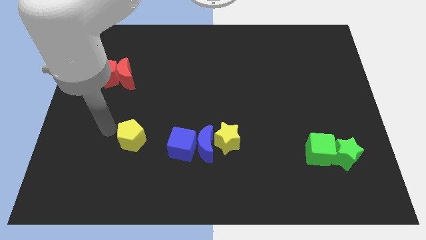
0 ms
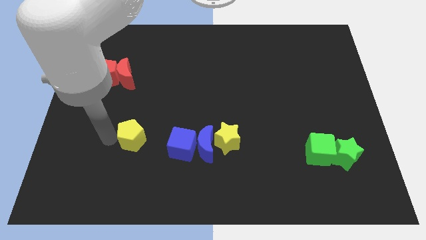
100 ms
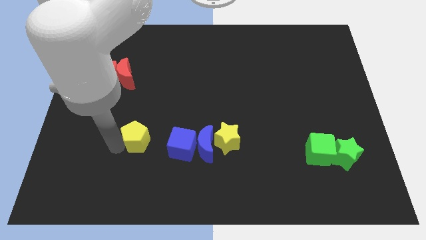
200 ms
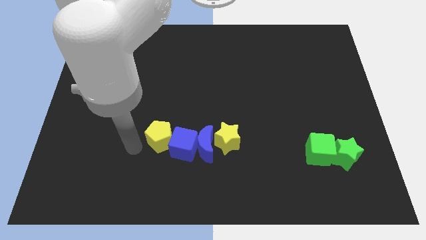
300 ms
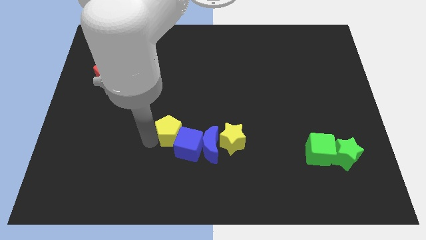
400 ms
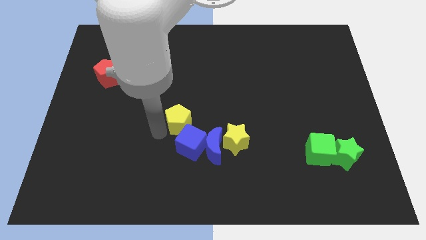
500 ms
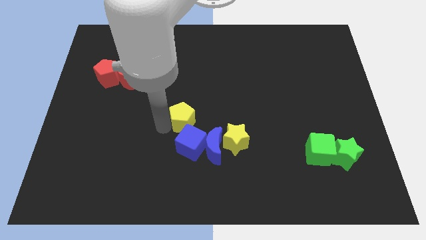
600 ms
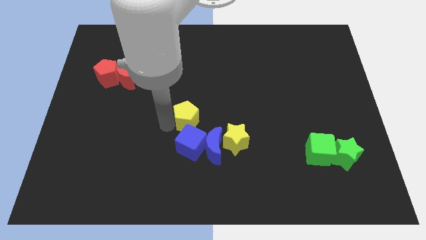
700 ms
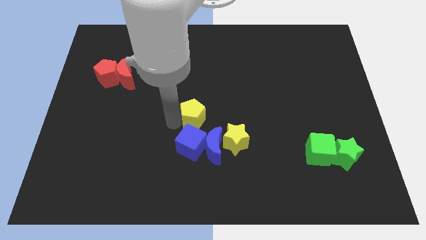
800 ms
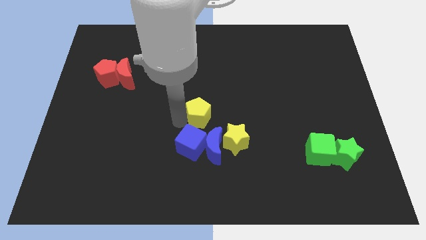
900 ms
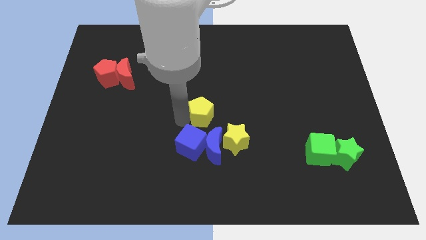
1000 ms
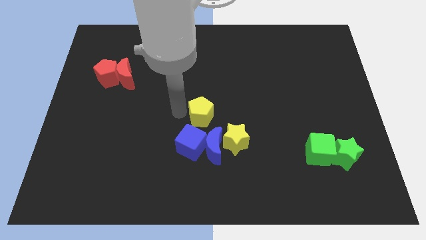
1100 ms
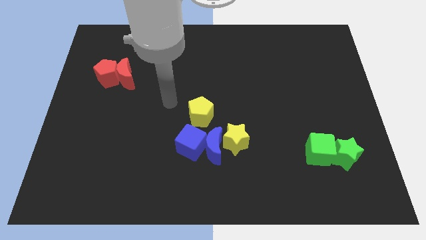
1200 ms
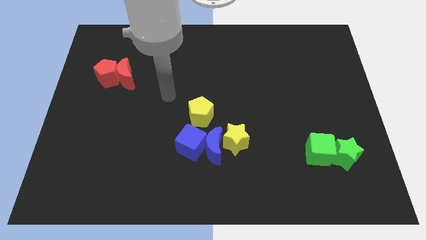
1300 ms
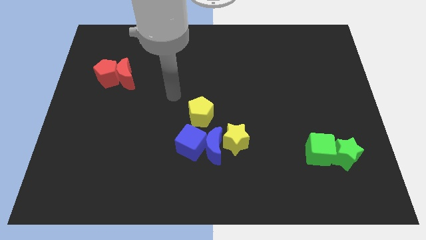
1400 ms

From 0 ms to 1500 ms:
move the yellow pentagon above the blue cube

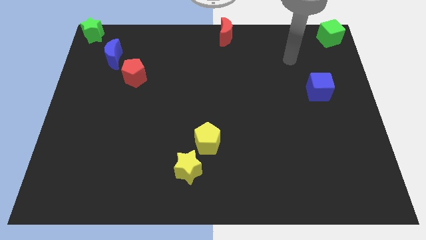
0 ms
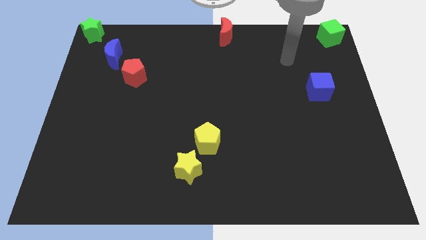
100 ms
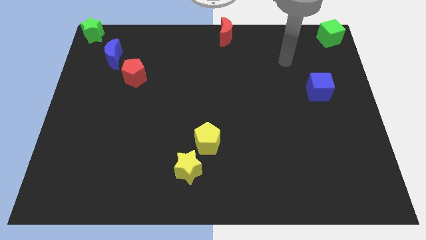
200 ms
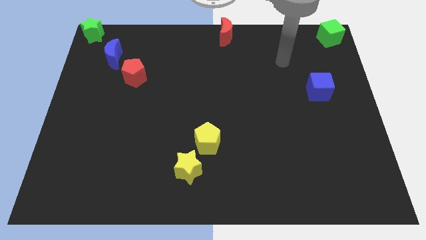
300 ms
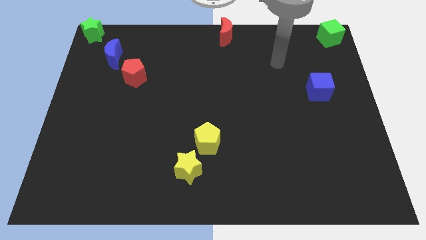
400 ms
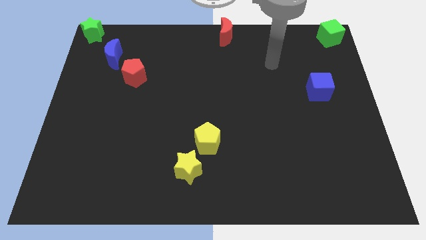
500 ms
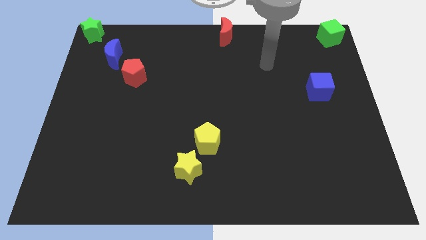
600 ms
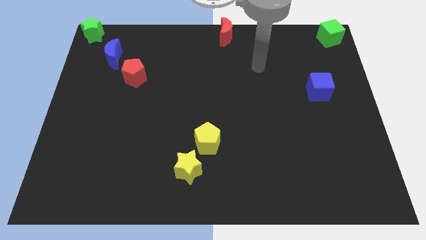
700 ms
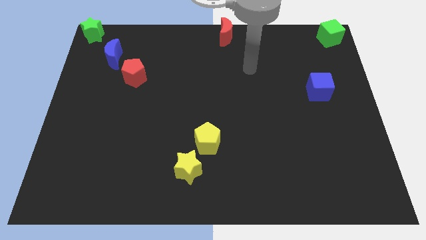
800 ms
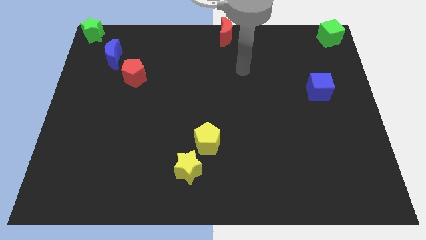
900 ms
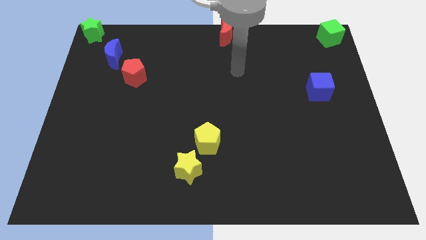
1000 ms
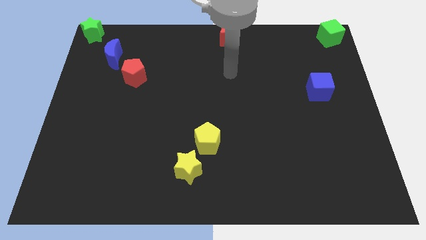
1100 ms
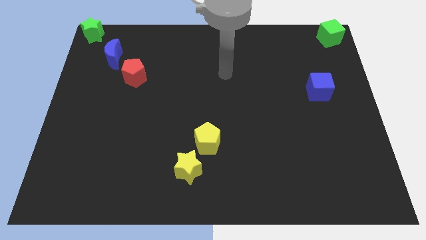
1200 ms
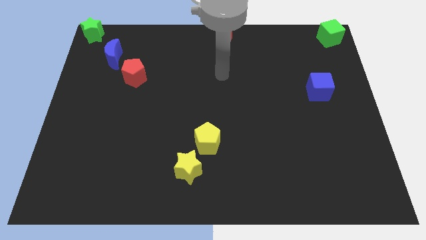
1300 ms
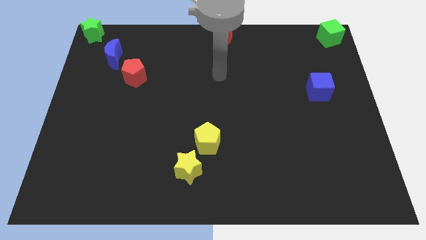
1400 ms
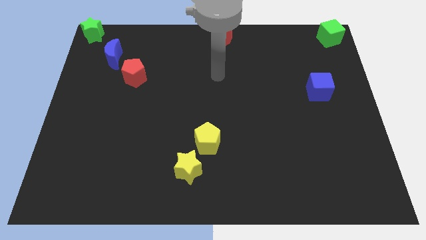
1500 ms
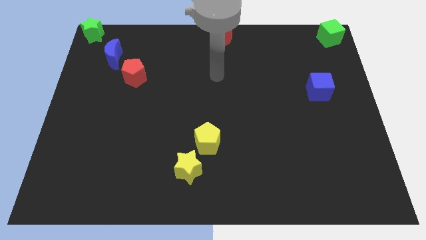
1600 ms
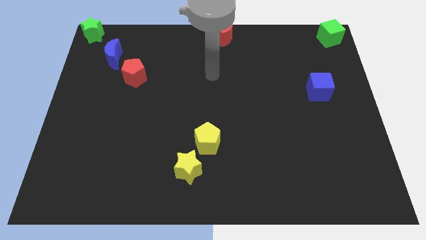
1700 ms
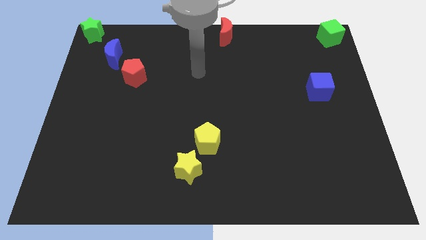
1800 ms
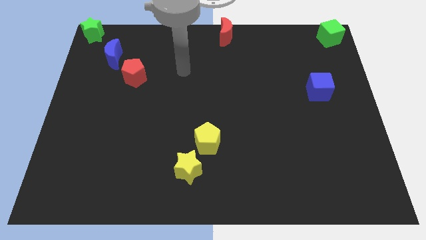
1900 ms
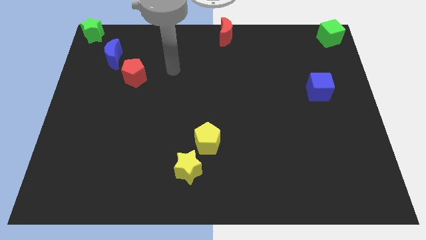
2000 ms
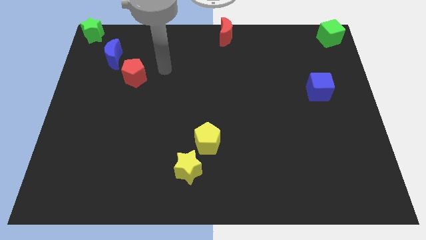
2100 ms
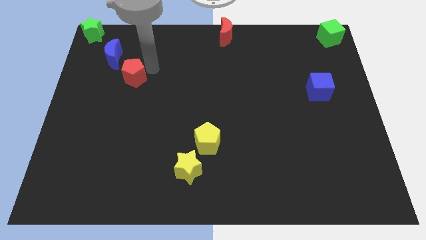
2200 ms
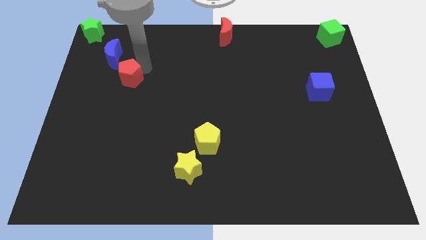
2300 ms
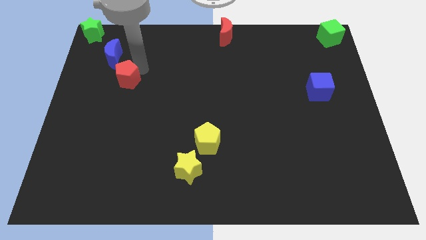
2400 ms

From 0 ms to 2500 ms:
move your arm close to the red pentagon

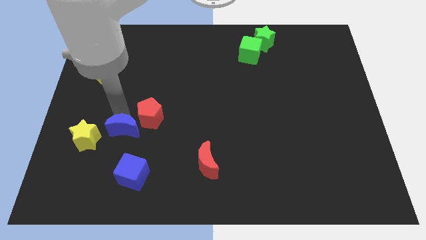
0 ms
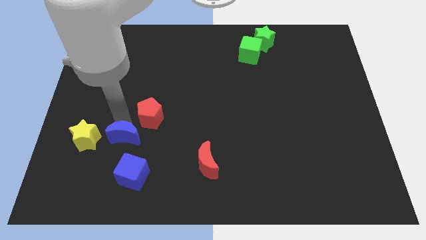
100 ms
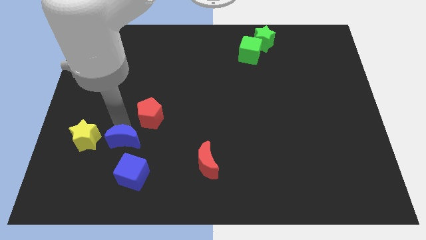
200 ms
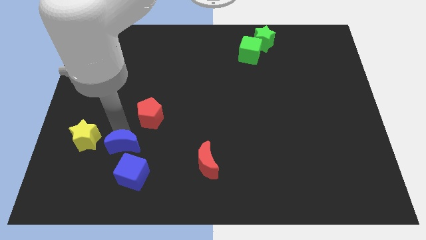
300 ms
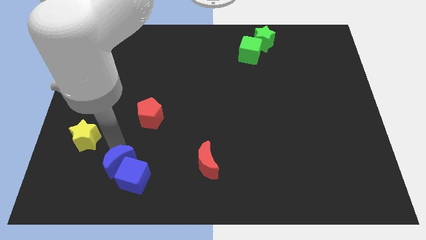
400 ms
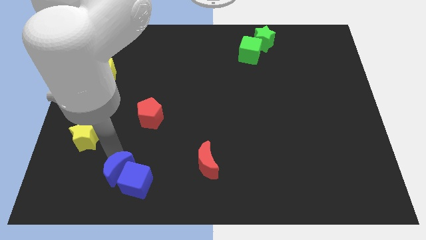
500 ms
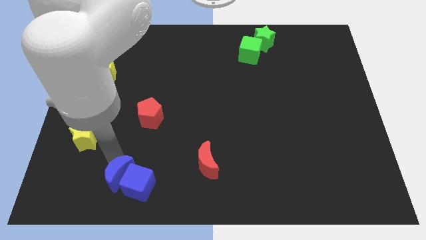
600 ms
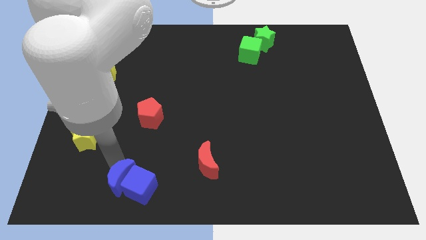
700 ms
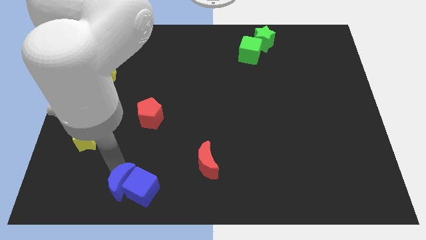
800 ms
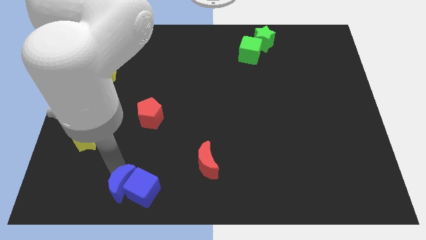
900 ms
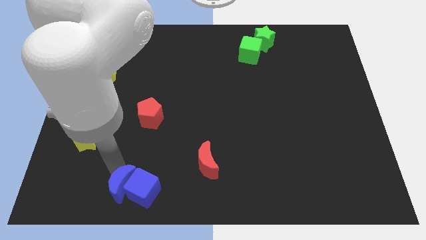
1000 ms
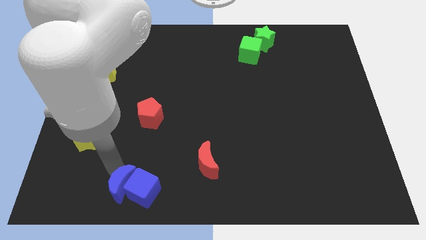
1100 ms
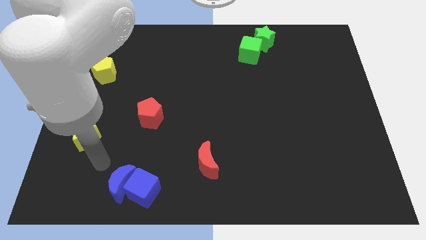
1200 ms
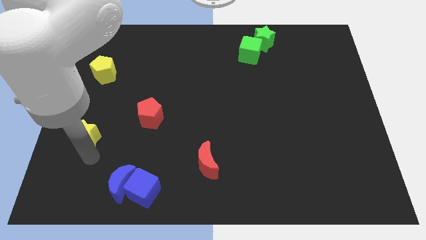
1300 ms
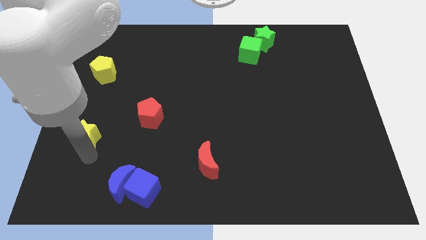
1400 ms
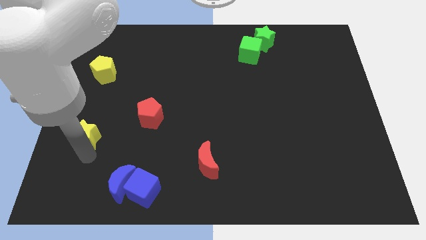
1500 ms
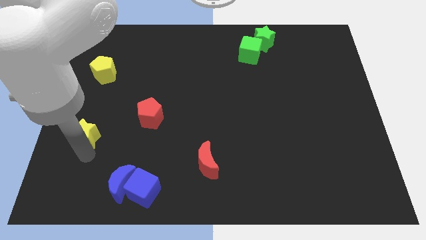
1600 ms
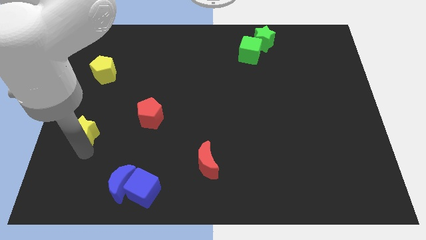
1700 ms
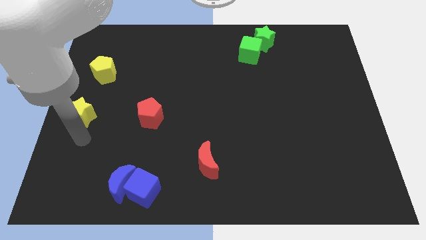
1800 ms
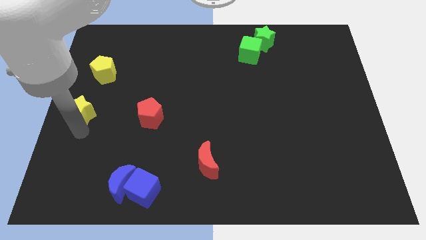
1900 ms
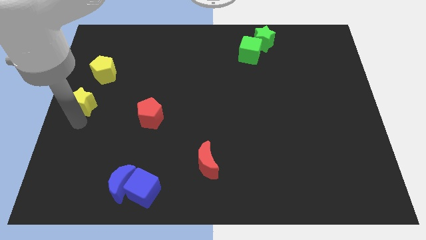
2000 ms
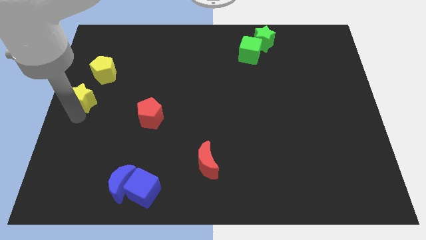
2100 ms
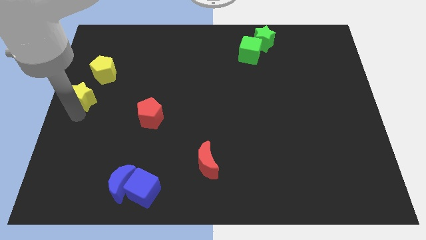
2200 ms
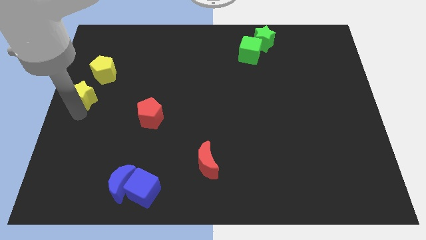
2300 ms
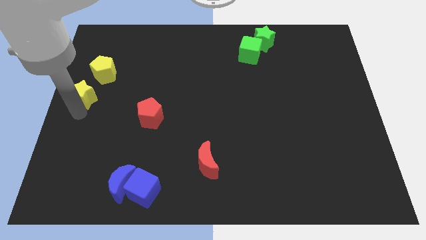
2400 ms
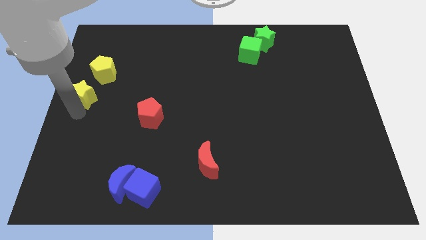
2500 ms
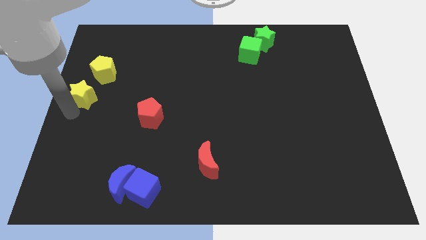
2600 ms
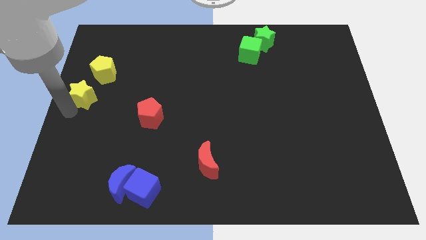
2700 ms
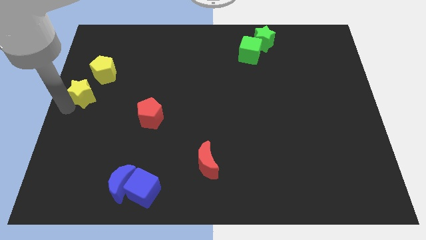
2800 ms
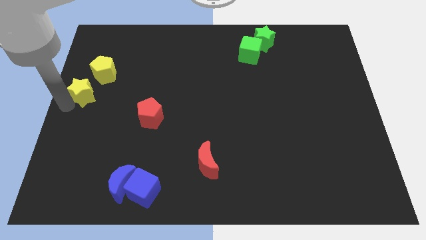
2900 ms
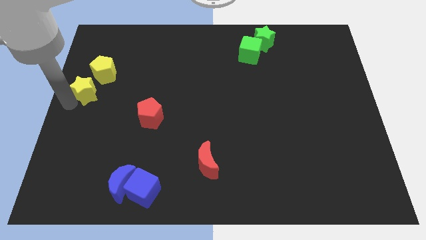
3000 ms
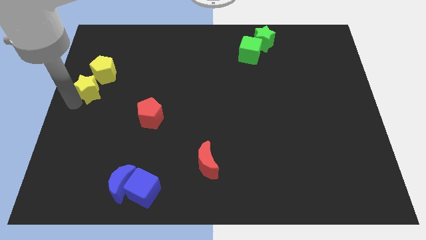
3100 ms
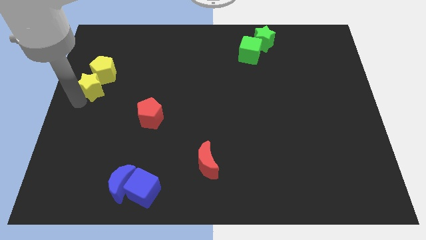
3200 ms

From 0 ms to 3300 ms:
move the yellow star towards the yellow pentagon

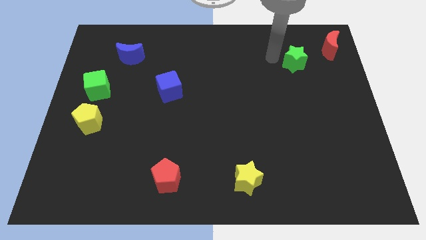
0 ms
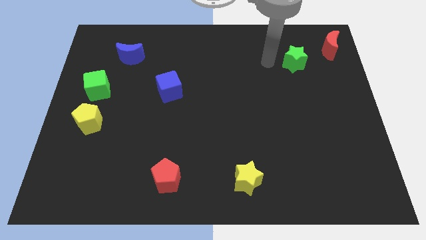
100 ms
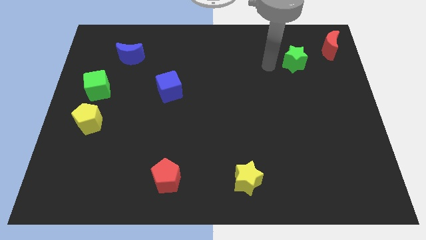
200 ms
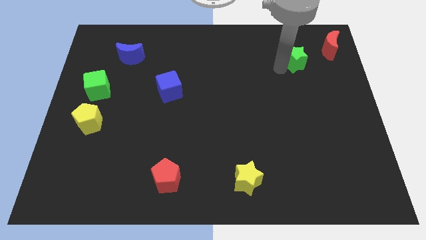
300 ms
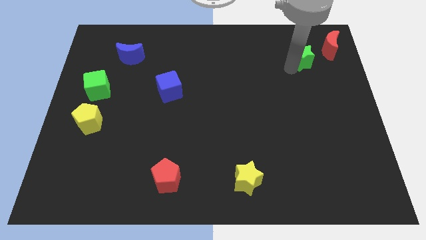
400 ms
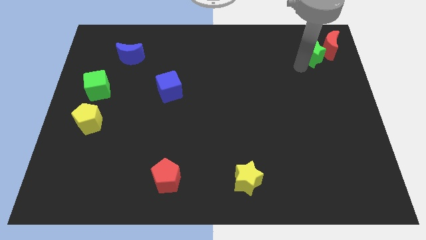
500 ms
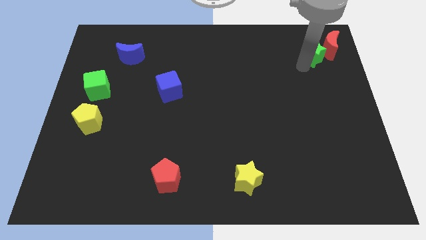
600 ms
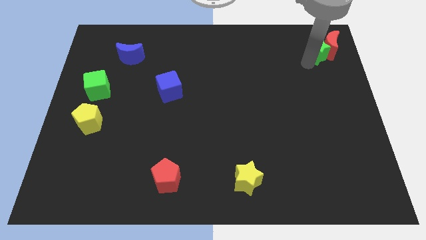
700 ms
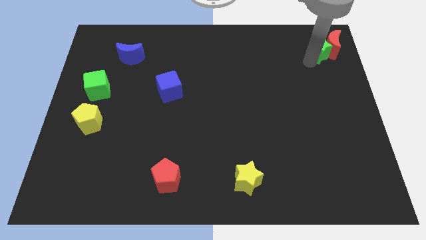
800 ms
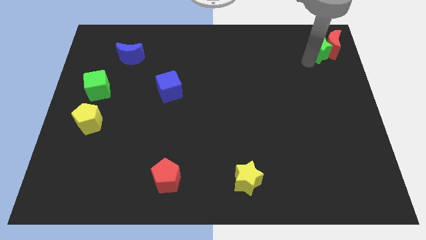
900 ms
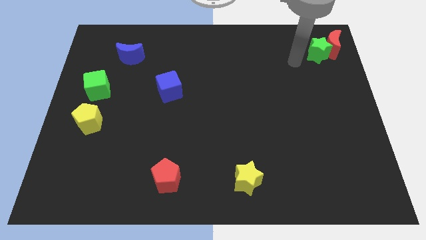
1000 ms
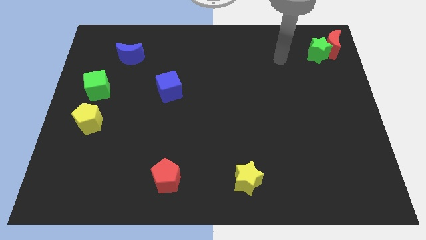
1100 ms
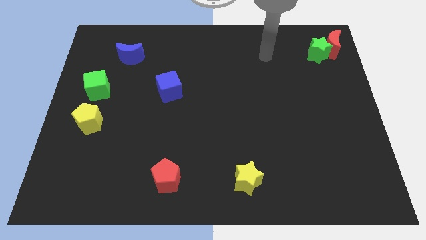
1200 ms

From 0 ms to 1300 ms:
move green star to the top right corner of the board

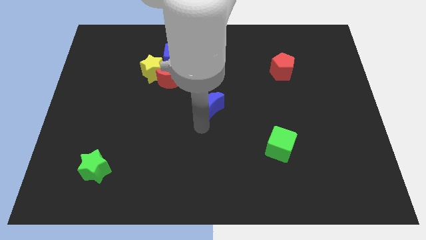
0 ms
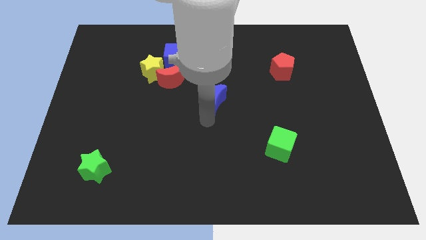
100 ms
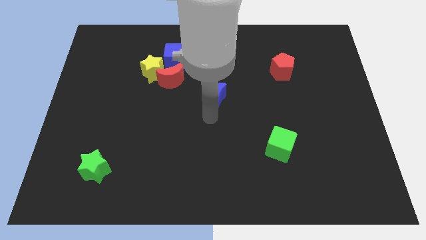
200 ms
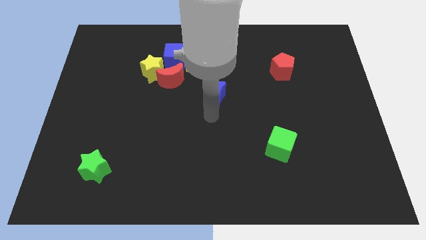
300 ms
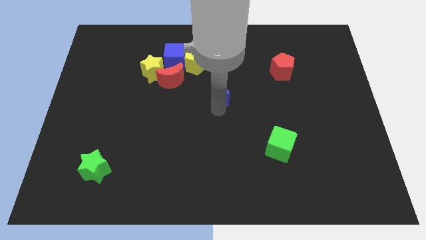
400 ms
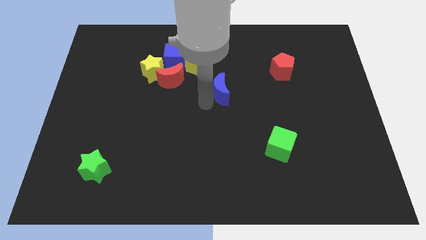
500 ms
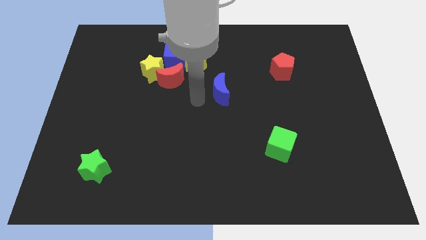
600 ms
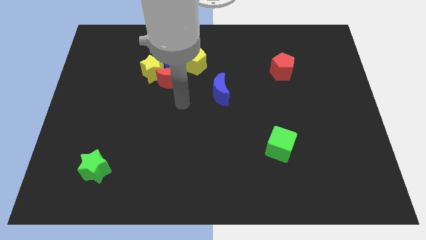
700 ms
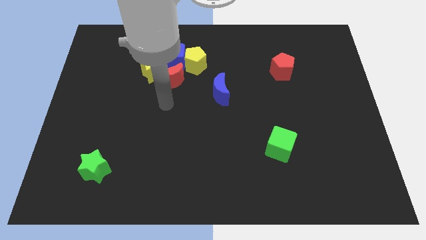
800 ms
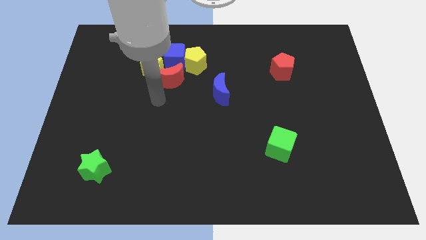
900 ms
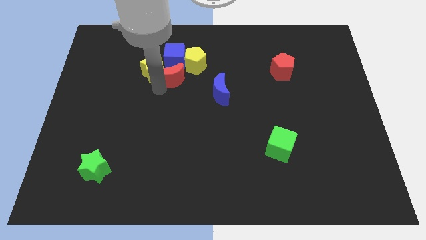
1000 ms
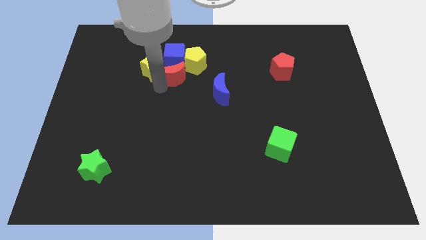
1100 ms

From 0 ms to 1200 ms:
place the blue crescent towards the bottom right side of the yellow pentagon
